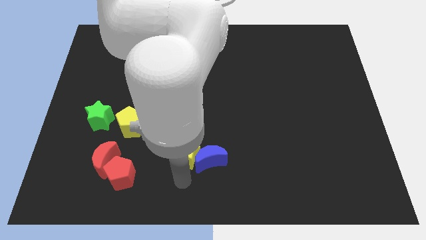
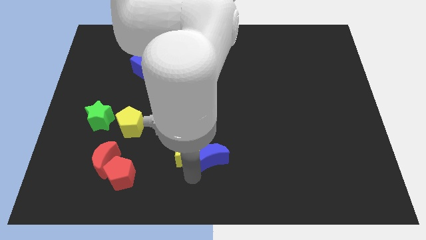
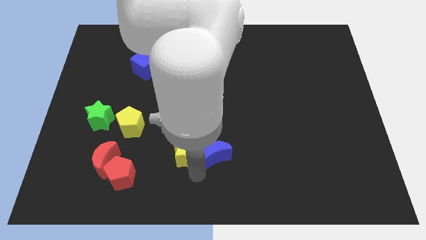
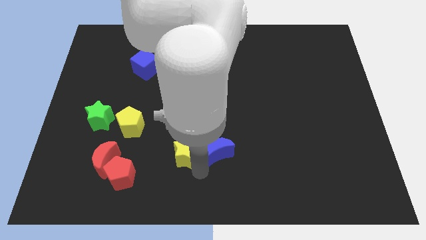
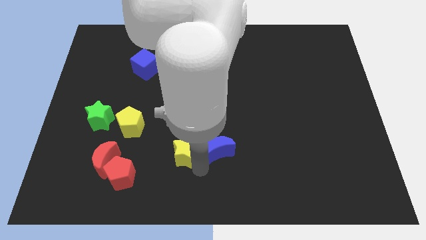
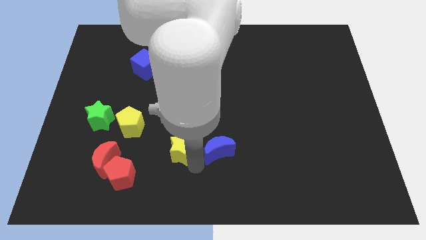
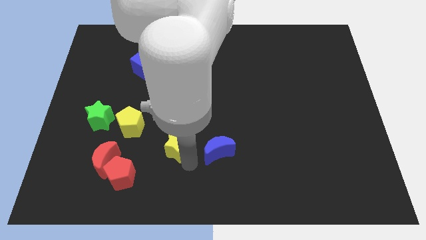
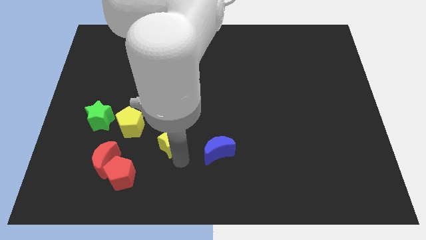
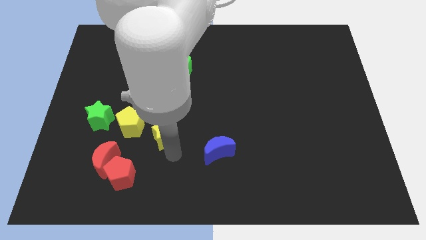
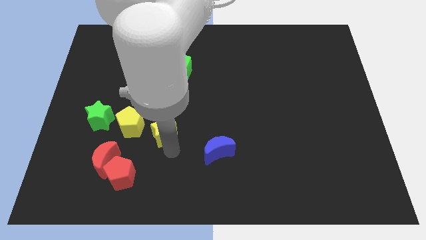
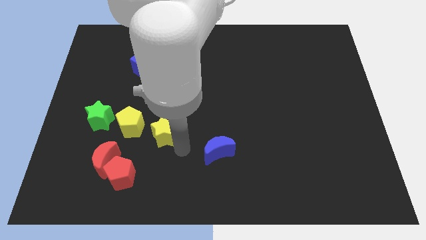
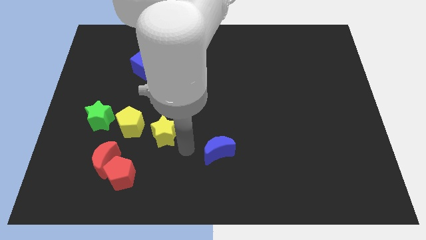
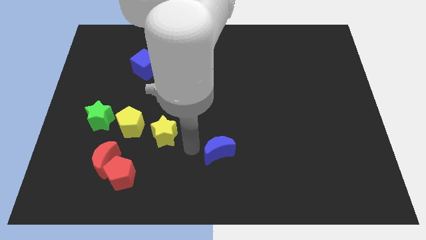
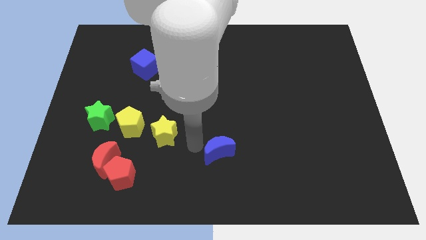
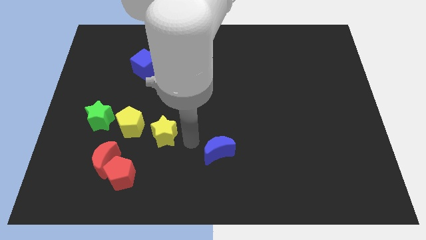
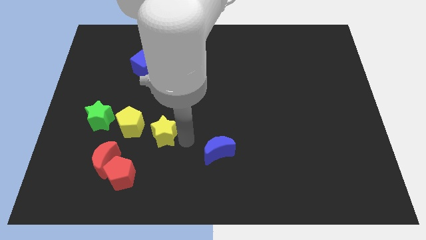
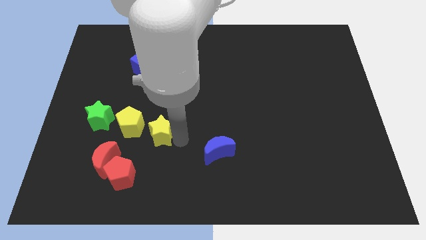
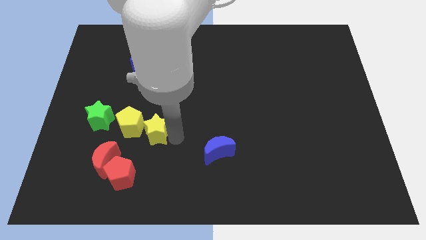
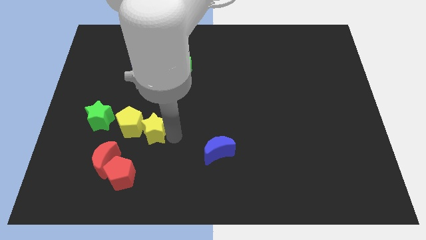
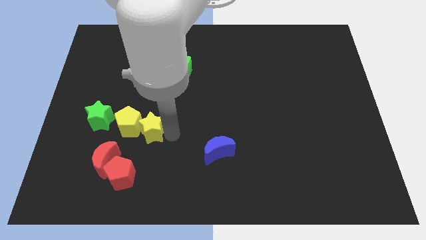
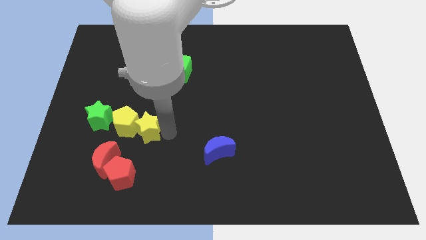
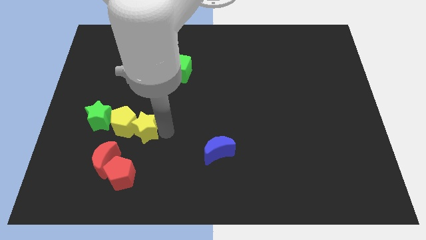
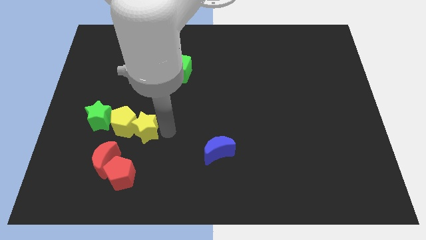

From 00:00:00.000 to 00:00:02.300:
push yellow star towards yellow pentagon

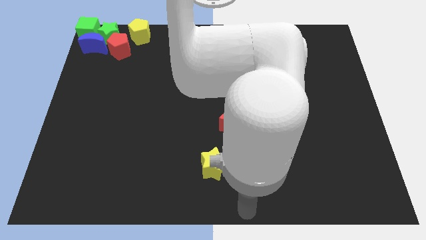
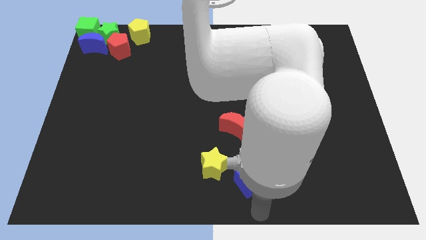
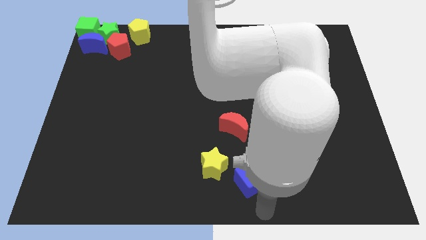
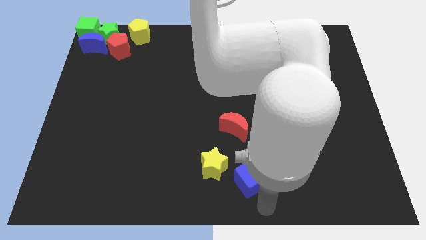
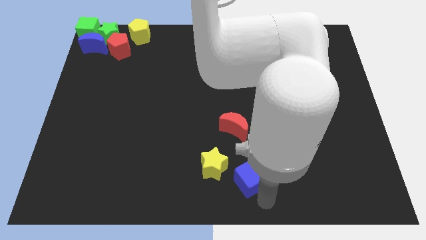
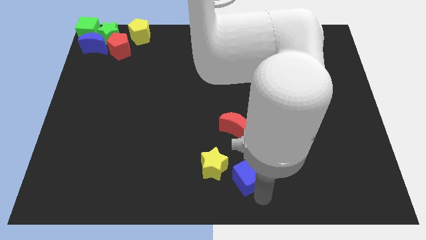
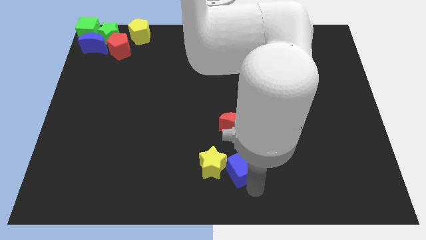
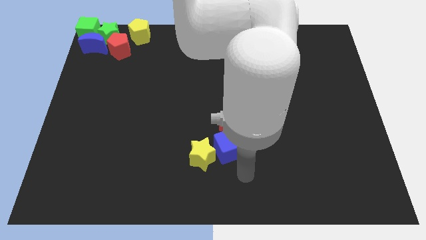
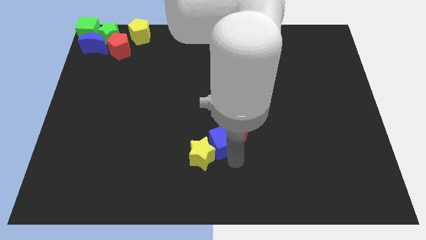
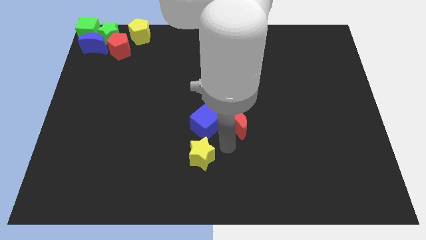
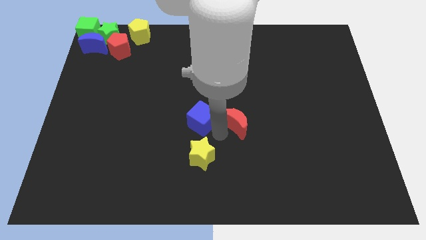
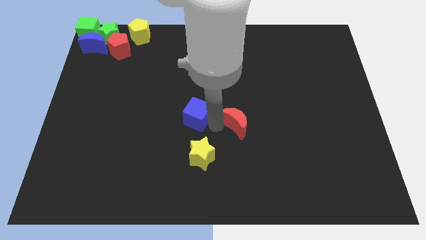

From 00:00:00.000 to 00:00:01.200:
push blue cube above yellow star

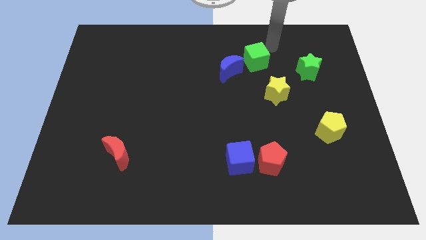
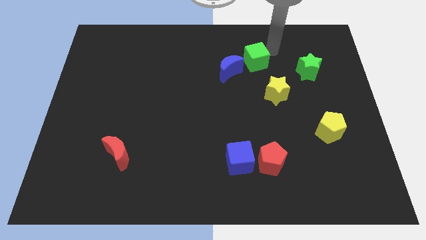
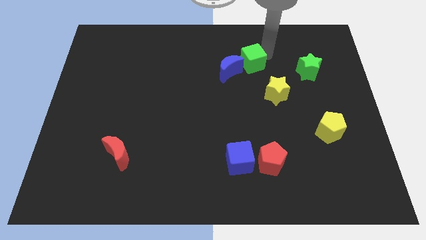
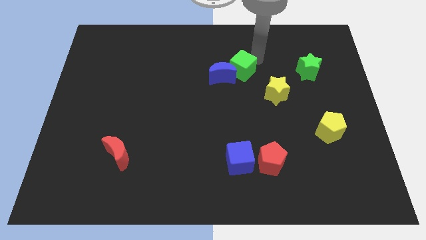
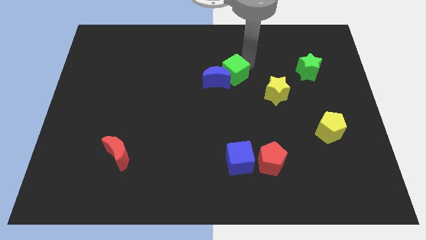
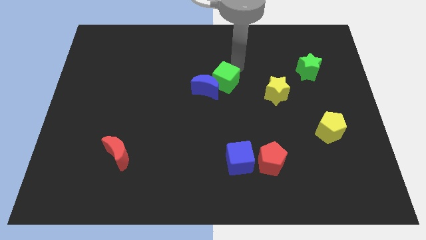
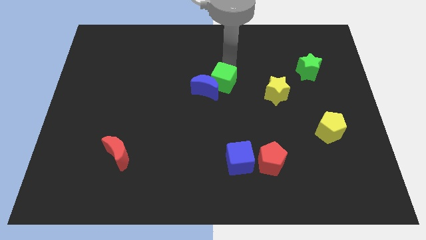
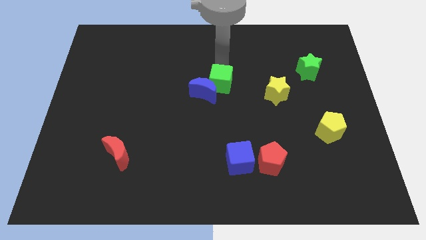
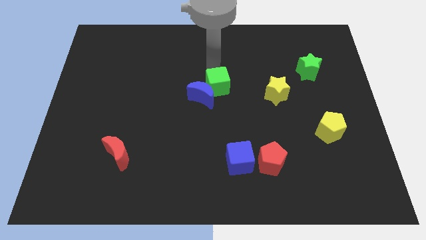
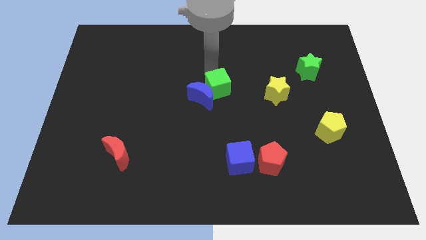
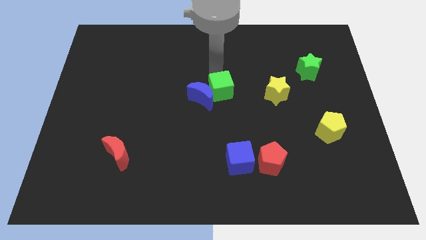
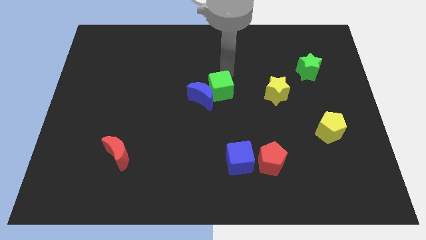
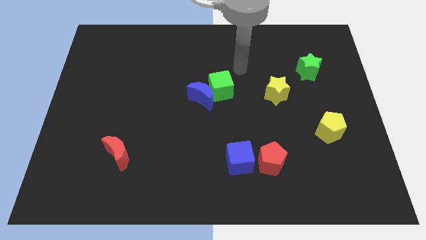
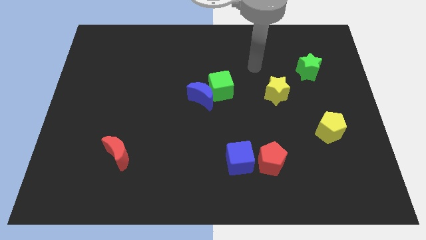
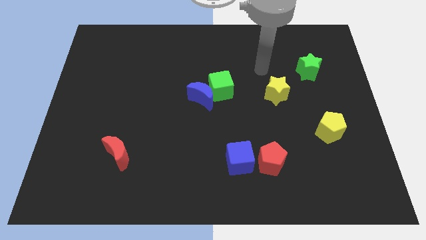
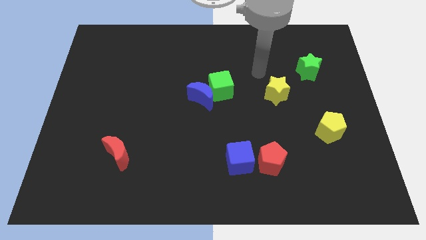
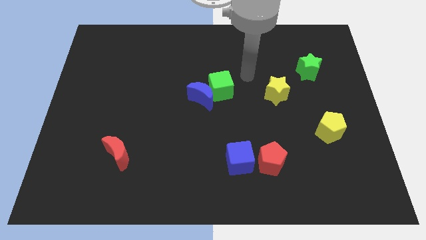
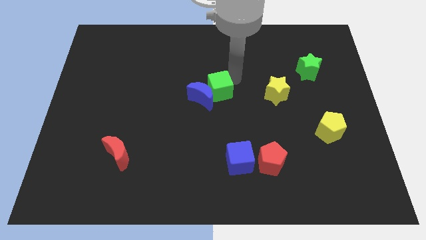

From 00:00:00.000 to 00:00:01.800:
move blue moon and green cube to the center of the board

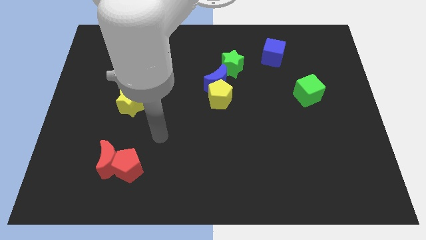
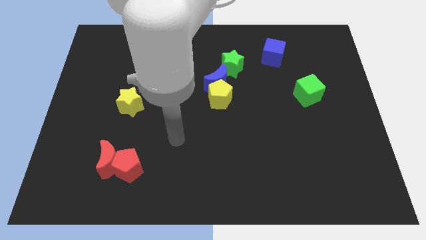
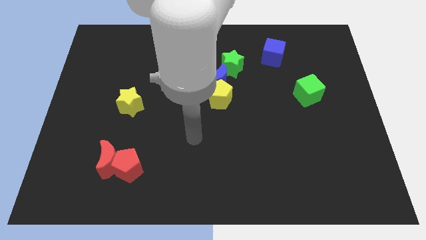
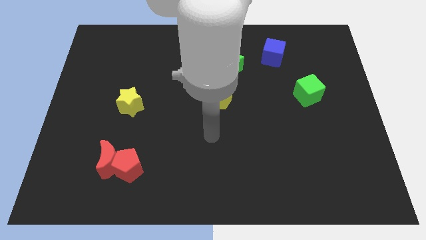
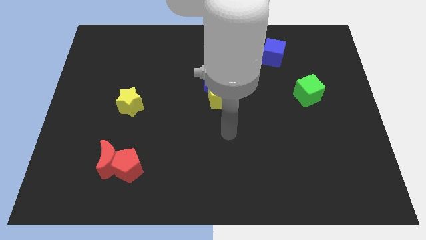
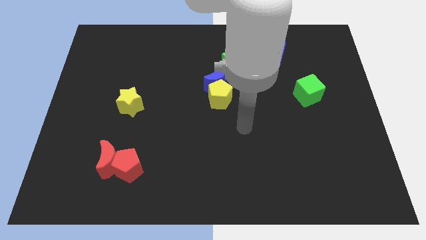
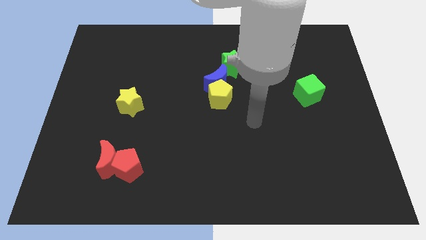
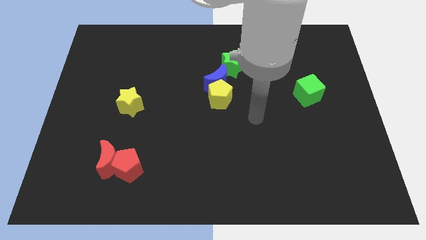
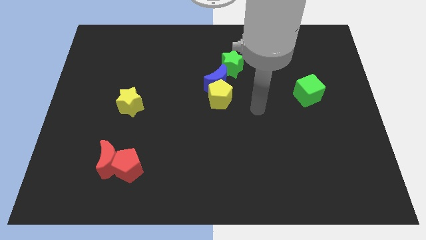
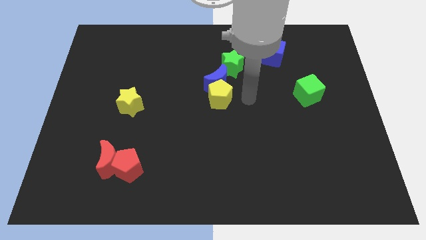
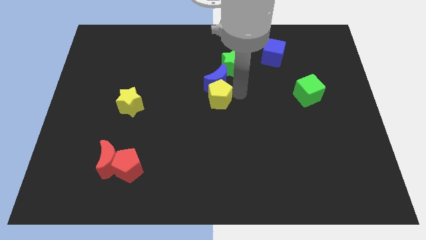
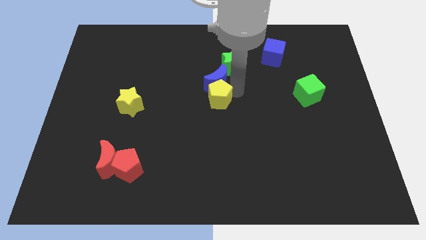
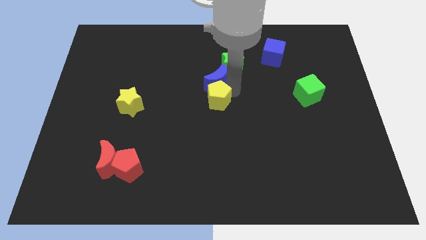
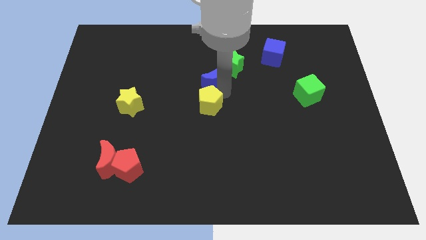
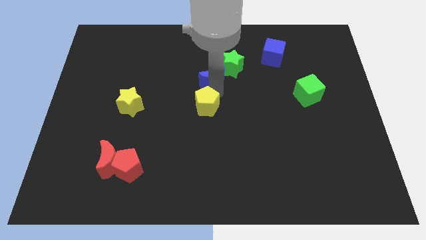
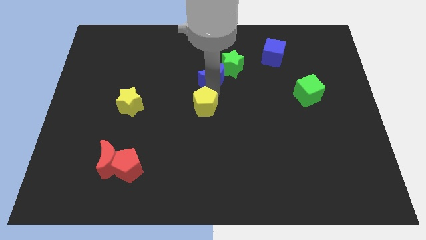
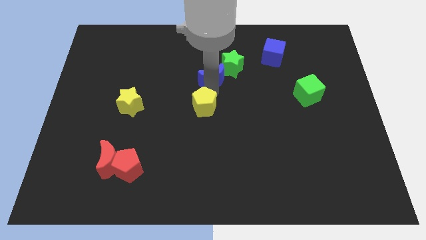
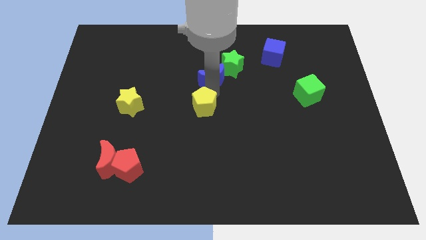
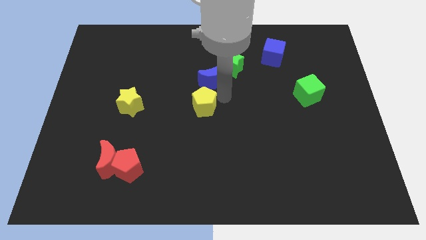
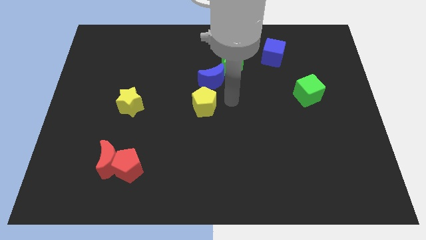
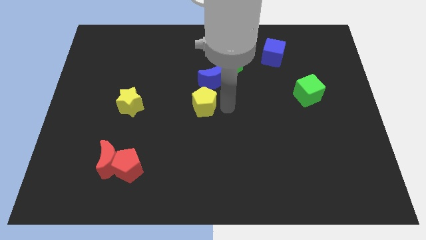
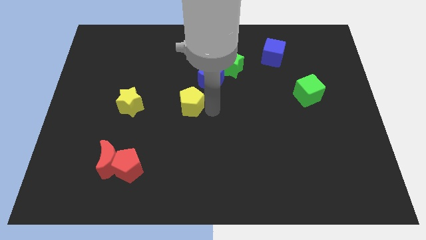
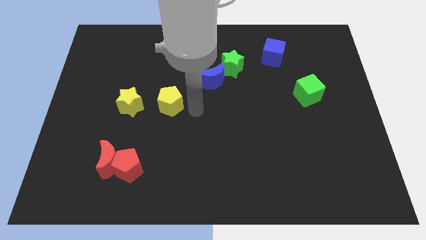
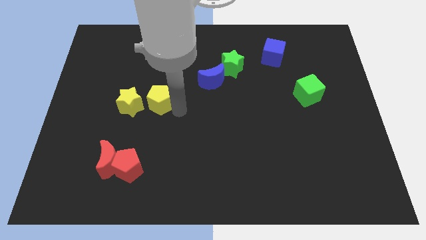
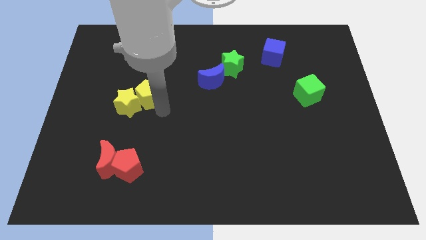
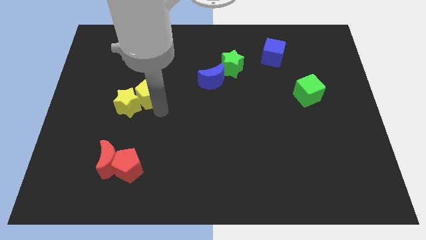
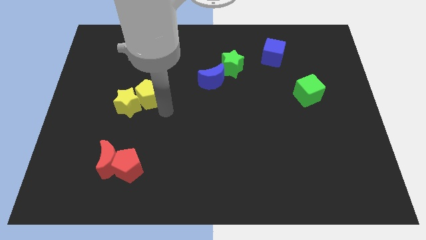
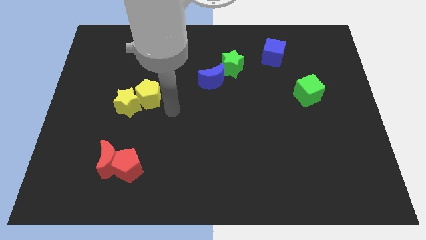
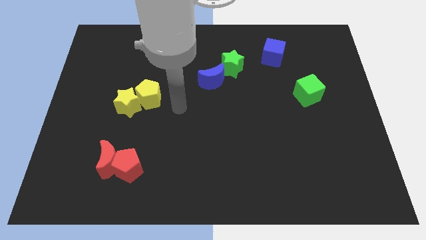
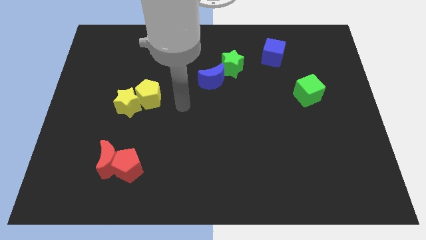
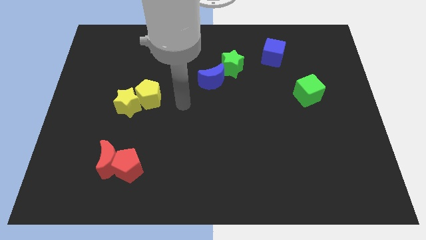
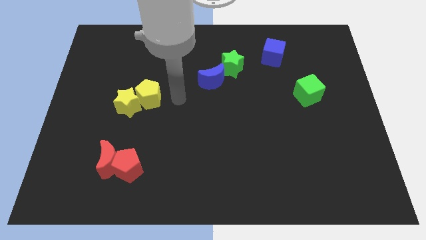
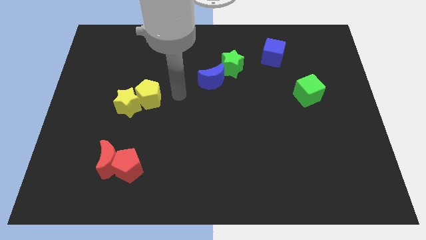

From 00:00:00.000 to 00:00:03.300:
move the yellow pentagon into the yellow star

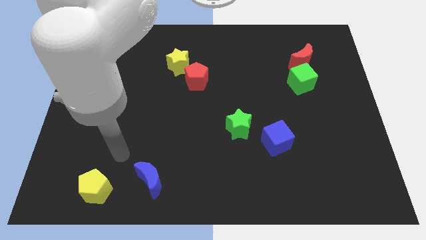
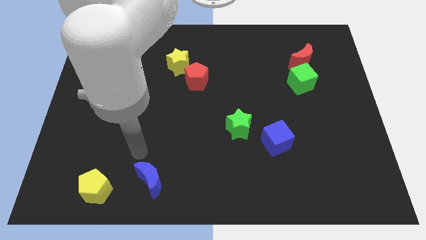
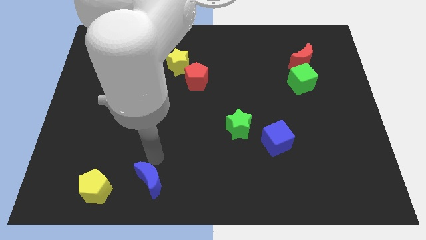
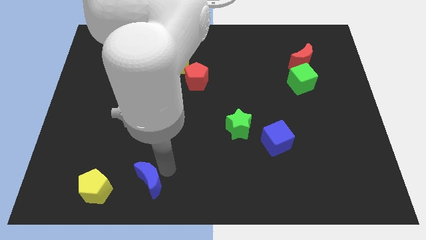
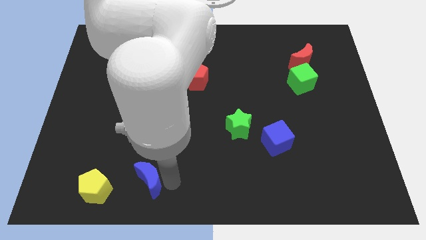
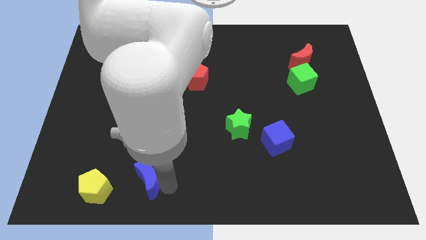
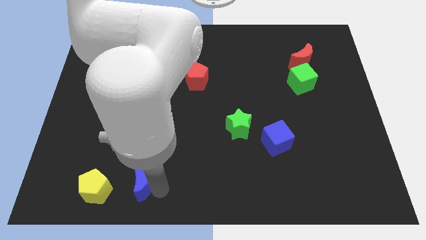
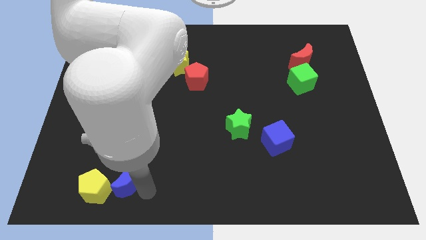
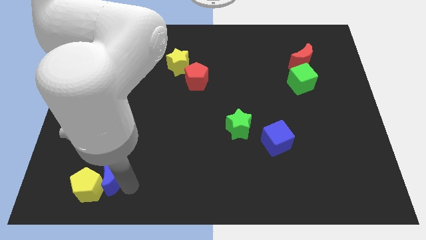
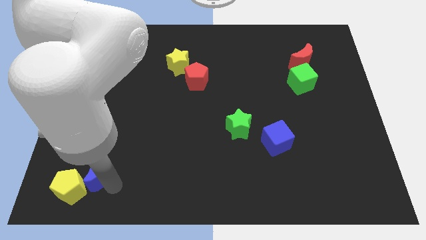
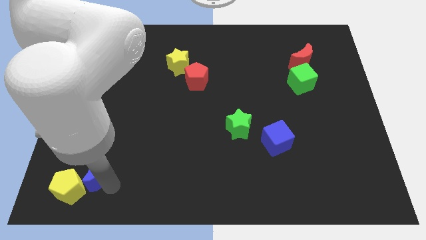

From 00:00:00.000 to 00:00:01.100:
push blue moon into yellow pentagon
